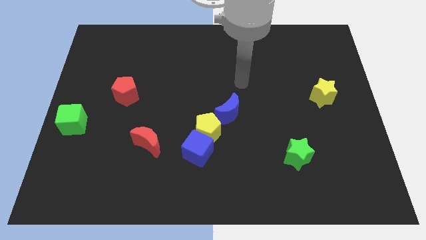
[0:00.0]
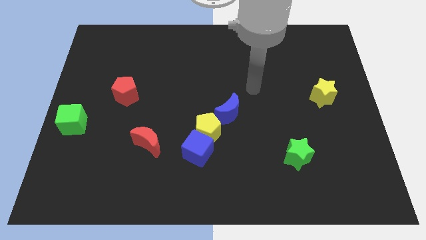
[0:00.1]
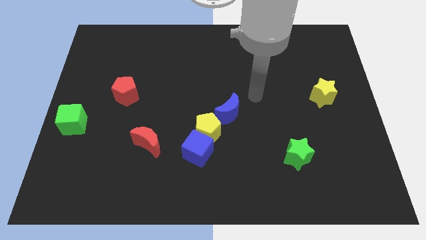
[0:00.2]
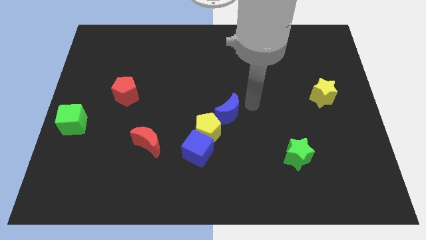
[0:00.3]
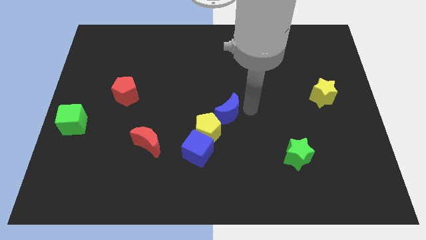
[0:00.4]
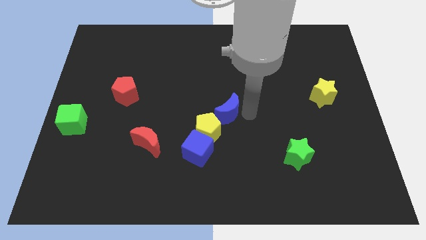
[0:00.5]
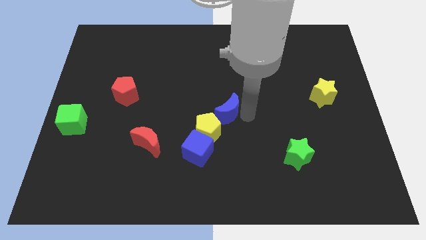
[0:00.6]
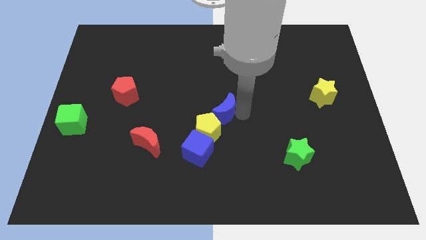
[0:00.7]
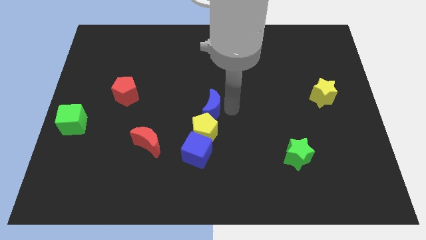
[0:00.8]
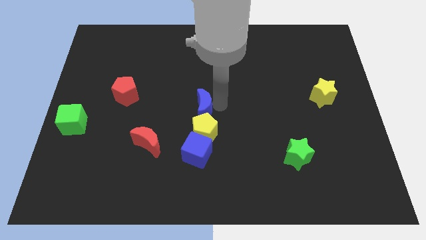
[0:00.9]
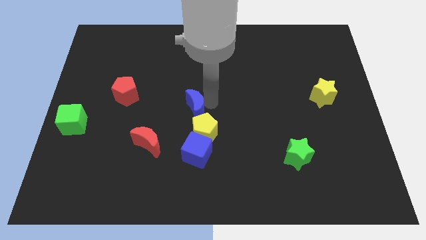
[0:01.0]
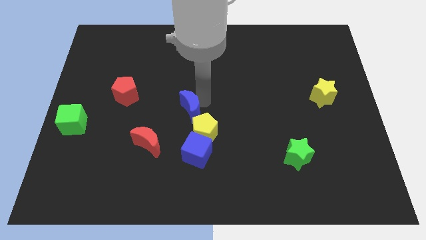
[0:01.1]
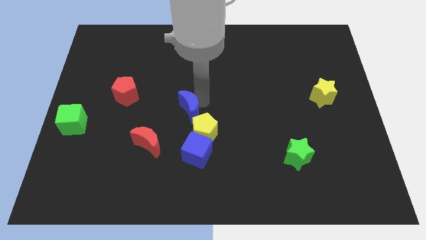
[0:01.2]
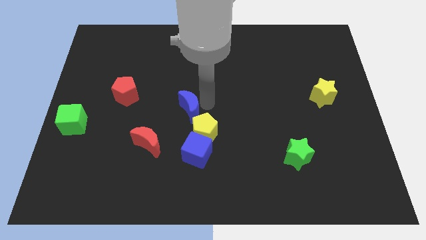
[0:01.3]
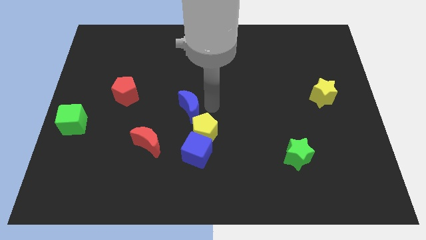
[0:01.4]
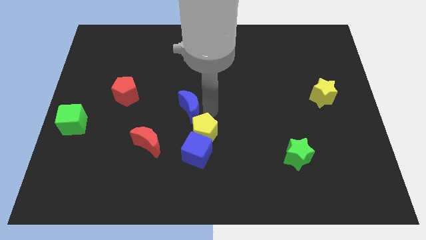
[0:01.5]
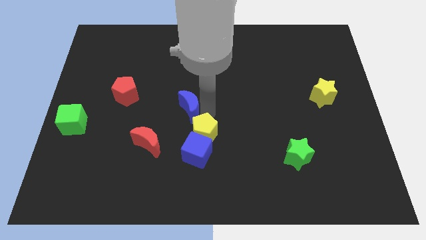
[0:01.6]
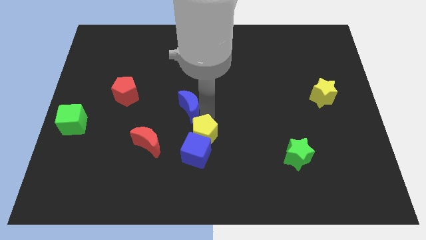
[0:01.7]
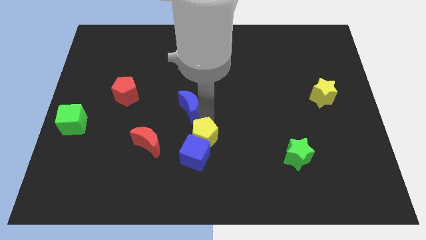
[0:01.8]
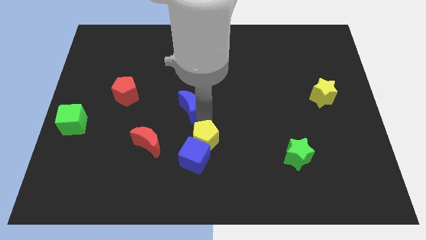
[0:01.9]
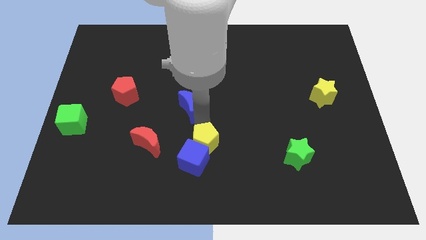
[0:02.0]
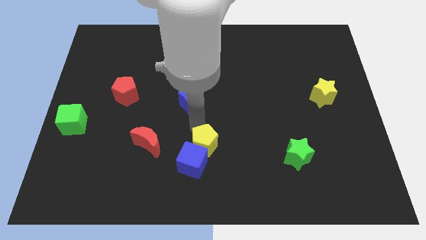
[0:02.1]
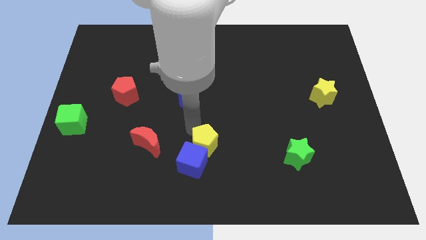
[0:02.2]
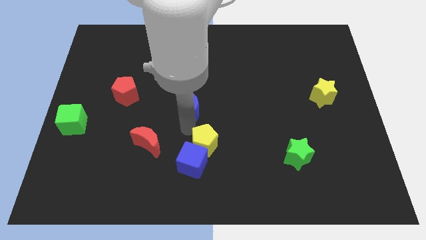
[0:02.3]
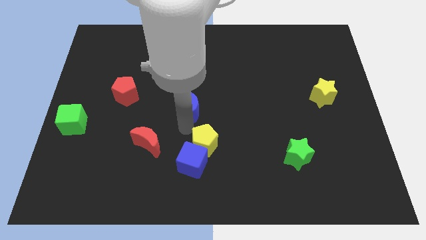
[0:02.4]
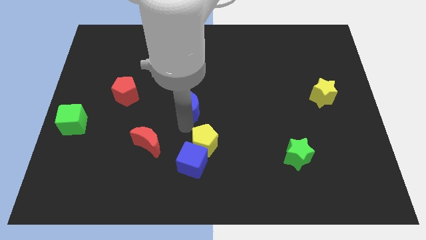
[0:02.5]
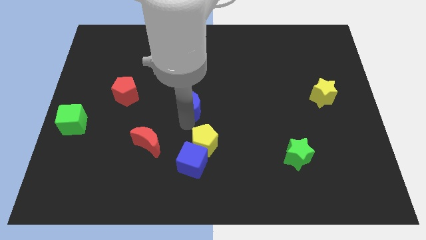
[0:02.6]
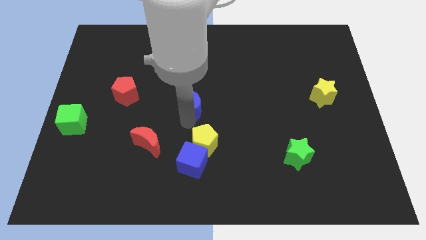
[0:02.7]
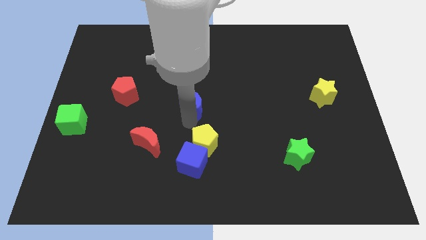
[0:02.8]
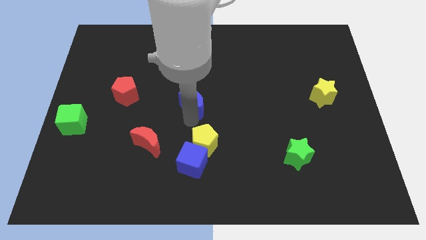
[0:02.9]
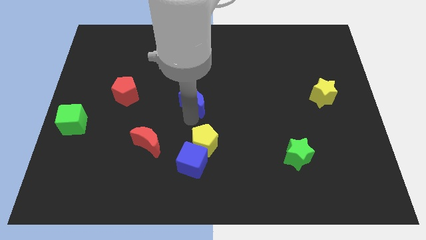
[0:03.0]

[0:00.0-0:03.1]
separate blue moon from yellow pentagon

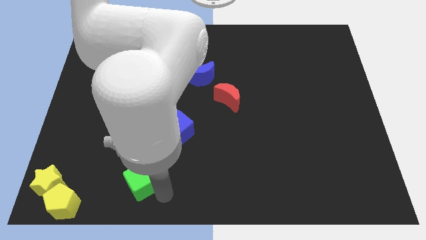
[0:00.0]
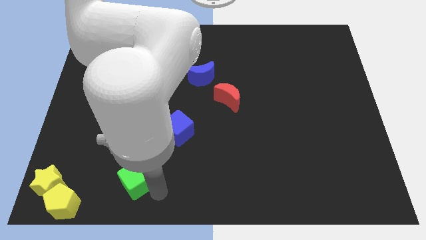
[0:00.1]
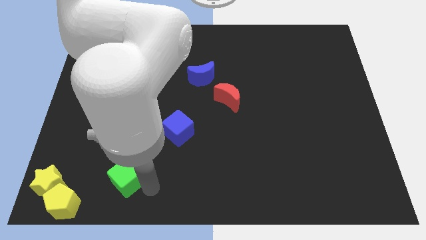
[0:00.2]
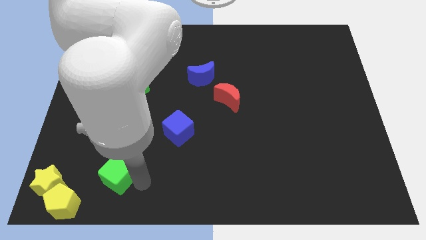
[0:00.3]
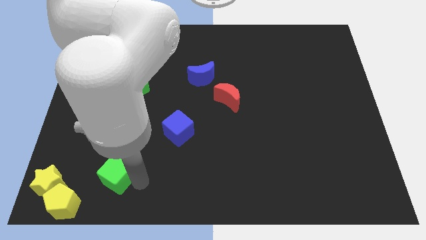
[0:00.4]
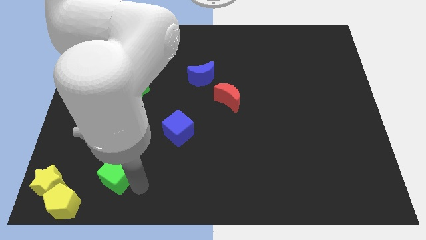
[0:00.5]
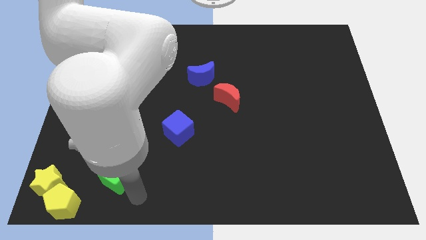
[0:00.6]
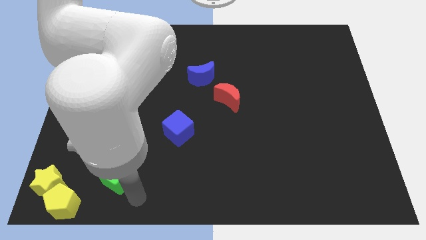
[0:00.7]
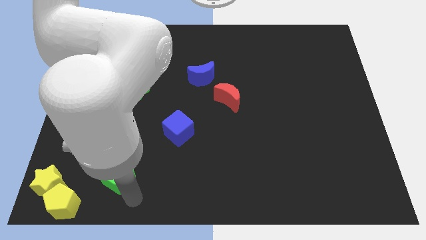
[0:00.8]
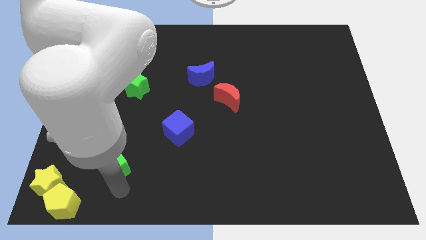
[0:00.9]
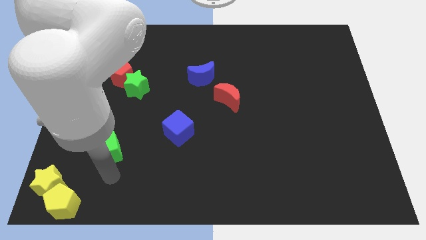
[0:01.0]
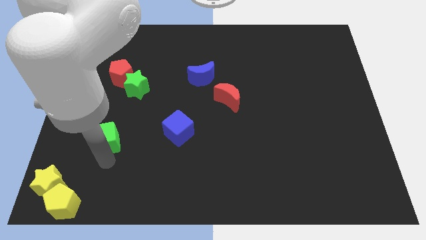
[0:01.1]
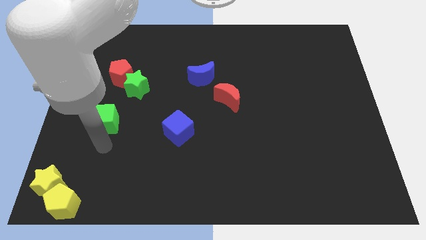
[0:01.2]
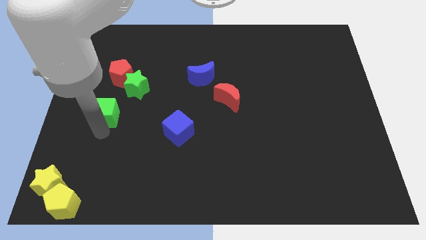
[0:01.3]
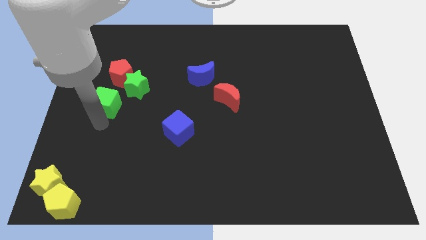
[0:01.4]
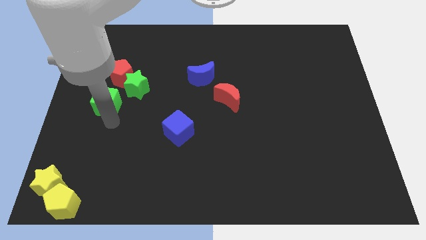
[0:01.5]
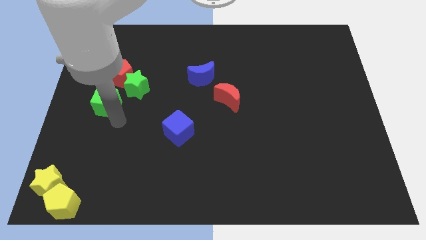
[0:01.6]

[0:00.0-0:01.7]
put the green cube vertically below the red pentagon

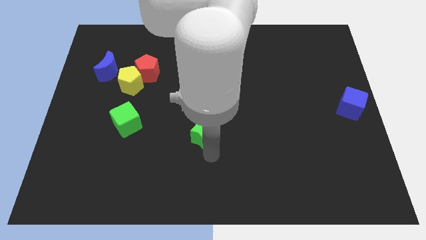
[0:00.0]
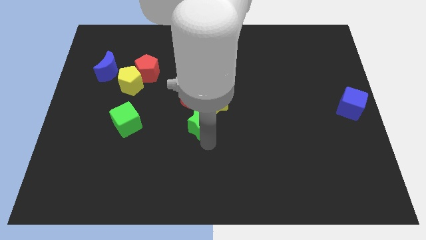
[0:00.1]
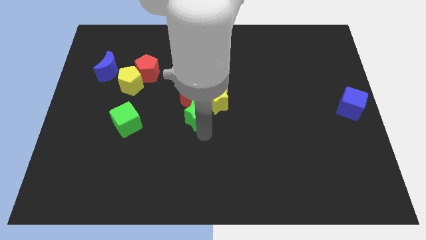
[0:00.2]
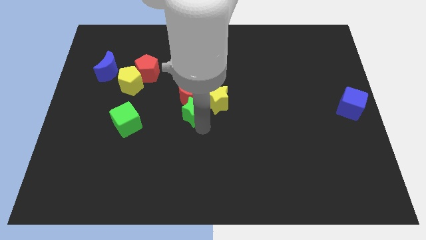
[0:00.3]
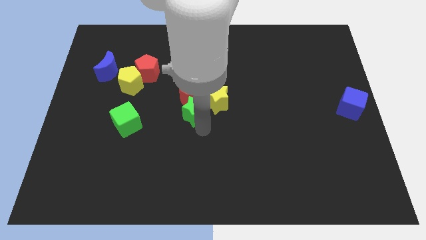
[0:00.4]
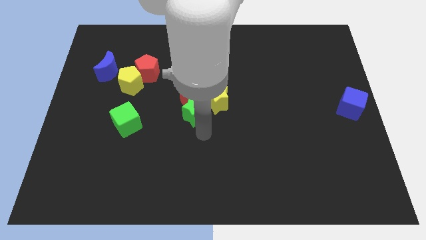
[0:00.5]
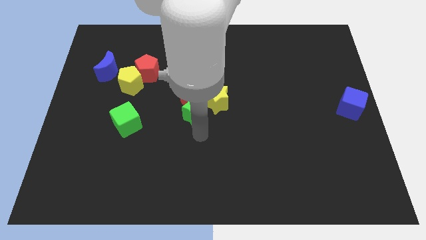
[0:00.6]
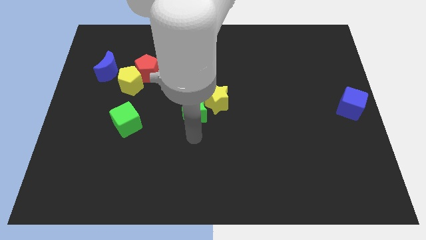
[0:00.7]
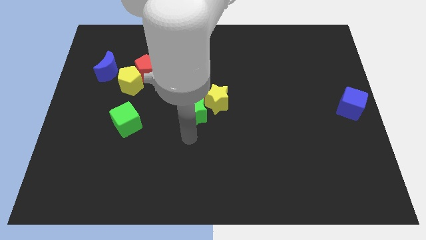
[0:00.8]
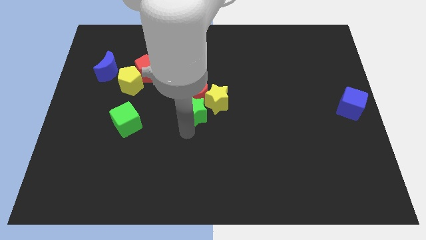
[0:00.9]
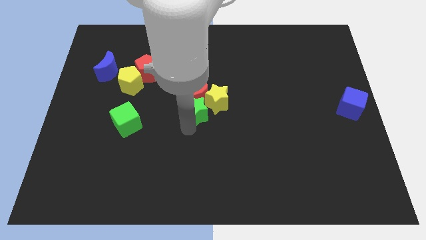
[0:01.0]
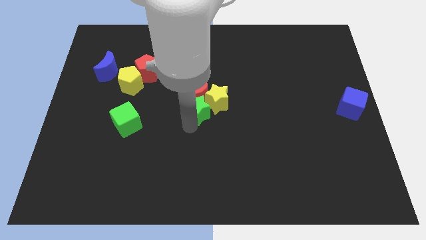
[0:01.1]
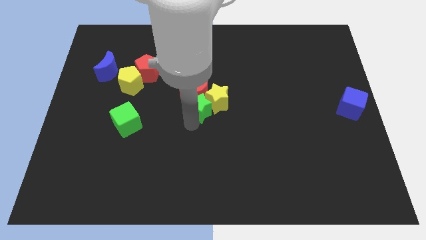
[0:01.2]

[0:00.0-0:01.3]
push the green star and place it next to the yellow star

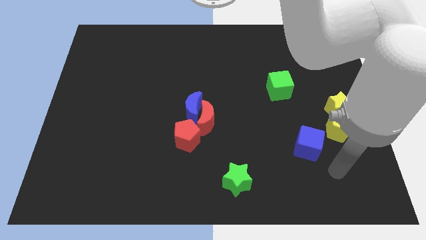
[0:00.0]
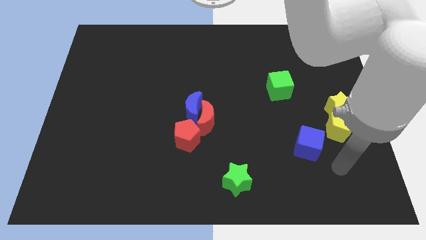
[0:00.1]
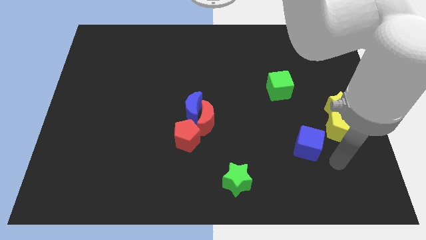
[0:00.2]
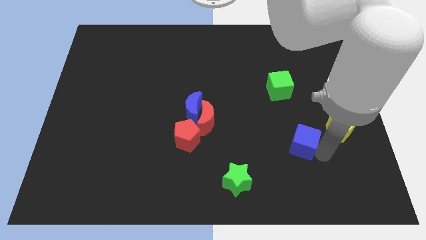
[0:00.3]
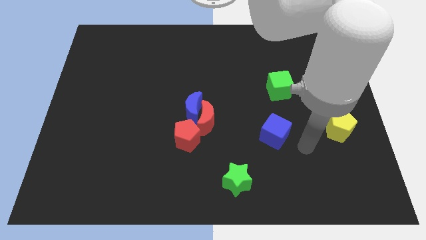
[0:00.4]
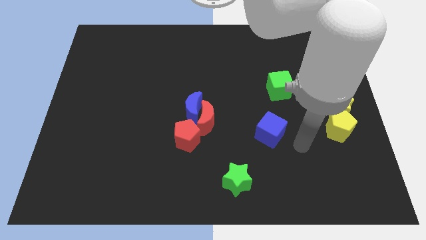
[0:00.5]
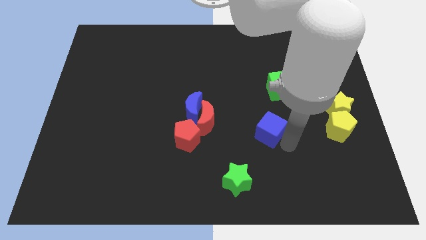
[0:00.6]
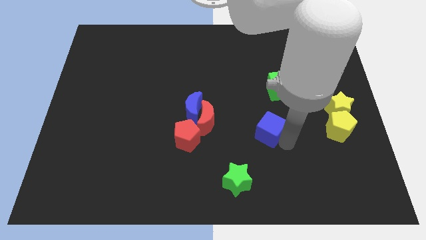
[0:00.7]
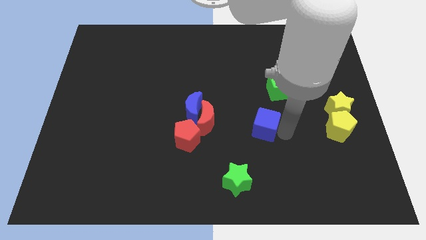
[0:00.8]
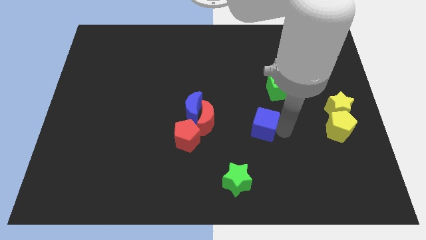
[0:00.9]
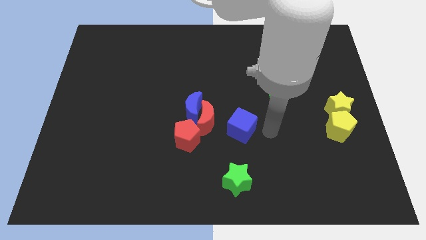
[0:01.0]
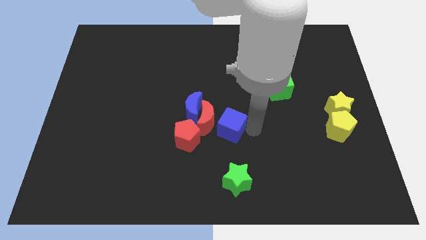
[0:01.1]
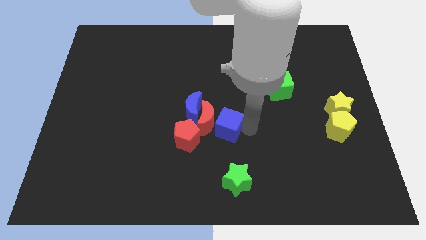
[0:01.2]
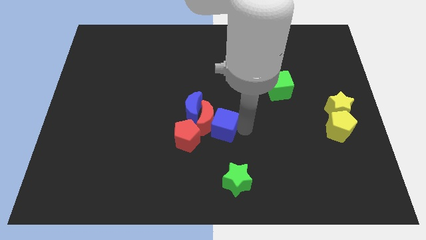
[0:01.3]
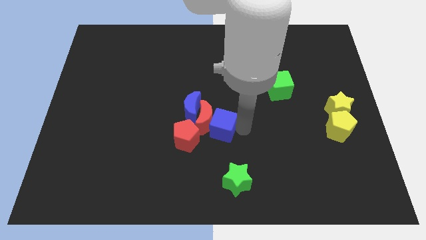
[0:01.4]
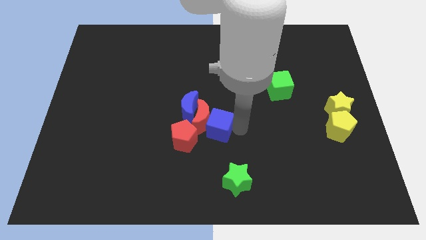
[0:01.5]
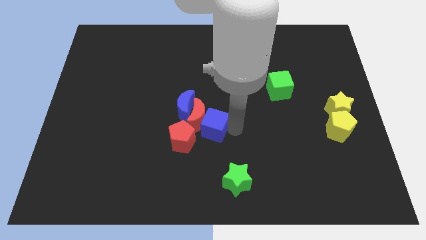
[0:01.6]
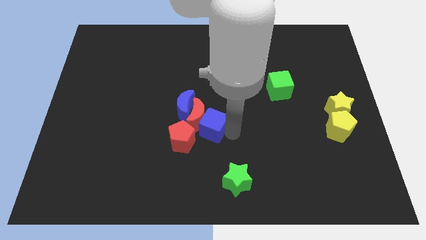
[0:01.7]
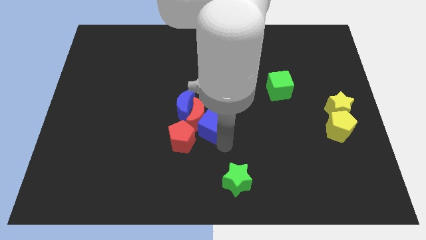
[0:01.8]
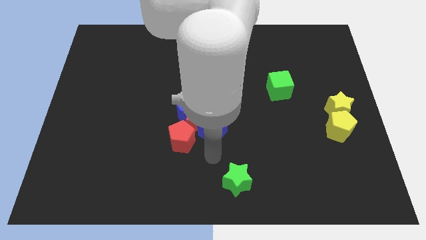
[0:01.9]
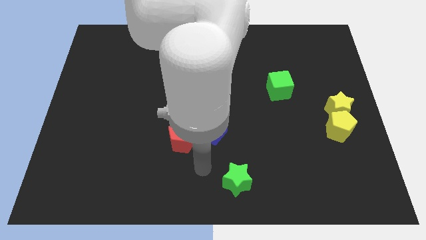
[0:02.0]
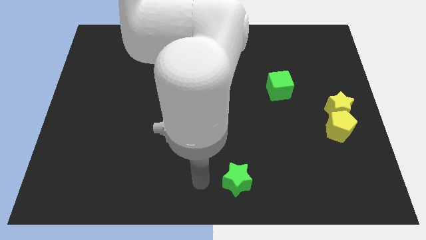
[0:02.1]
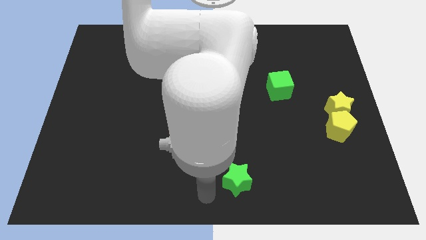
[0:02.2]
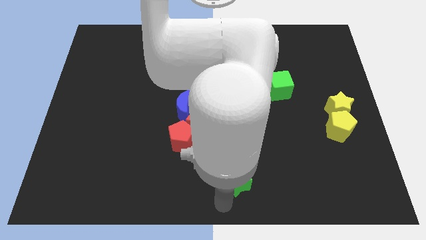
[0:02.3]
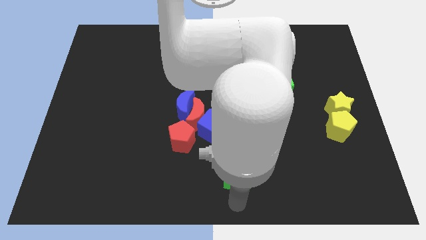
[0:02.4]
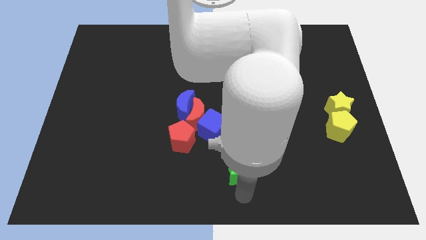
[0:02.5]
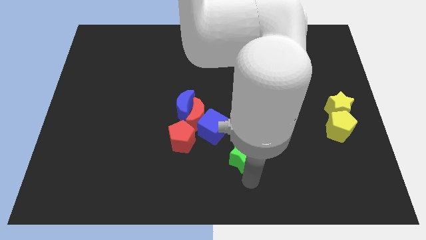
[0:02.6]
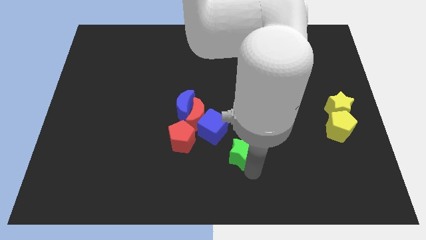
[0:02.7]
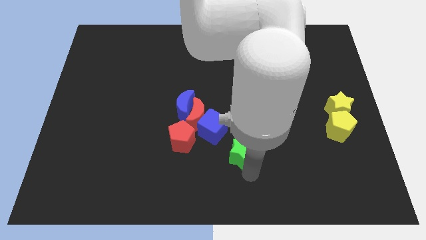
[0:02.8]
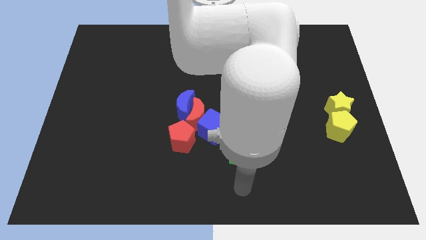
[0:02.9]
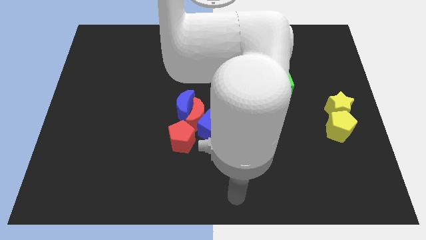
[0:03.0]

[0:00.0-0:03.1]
move green star upwards
